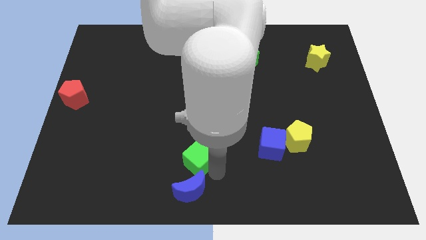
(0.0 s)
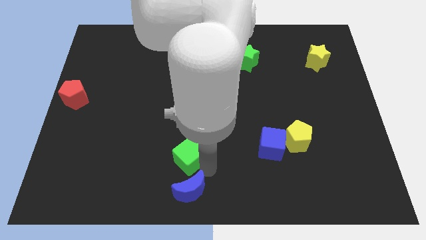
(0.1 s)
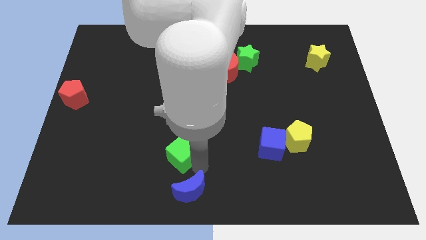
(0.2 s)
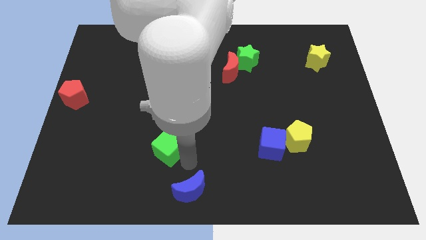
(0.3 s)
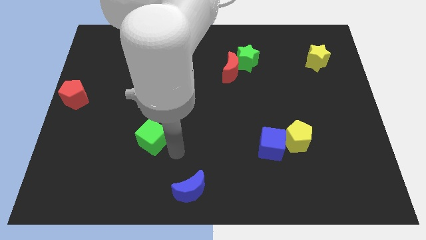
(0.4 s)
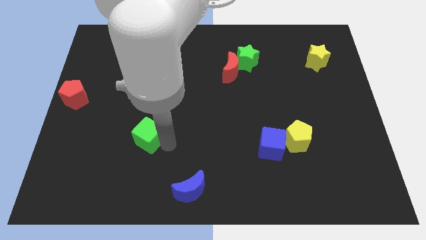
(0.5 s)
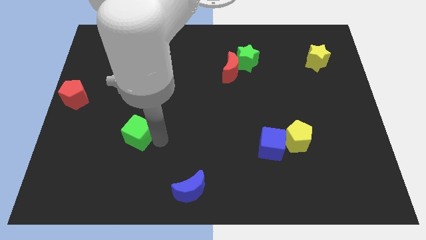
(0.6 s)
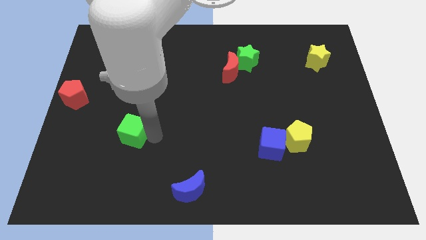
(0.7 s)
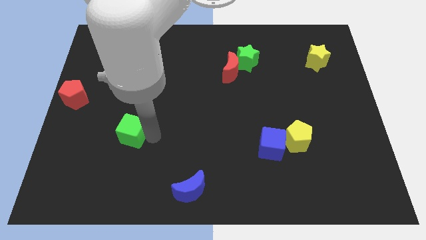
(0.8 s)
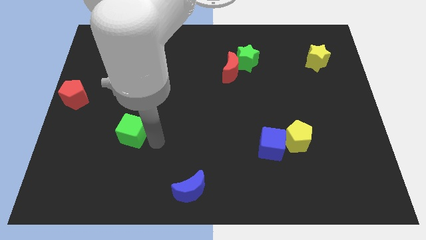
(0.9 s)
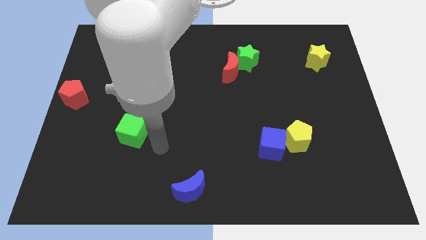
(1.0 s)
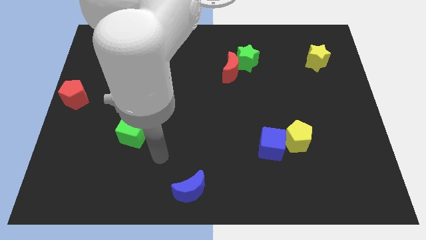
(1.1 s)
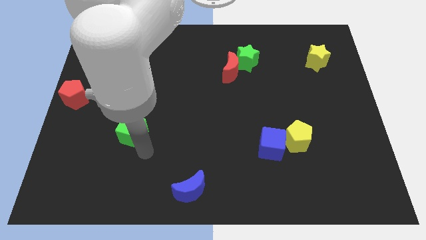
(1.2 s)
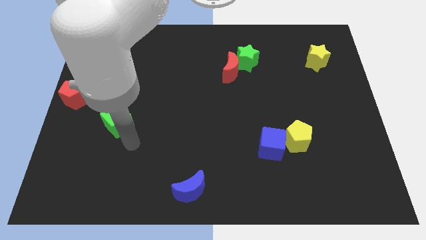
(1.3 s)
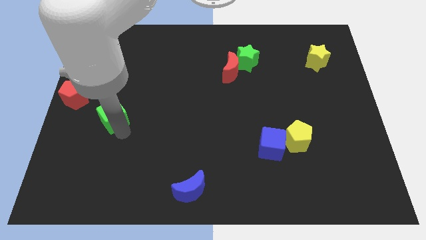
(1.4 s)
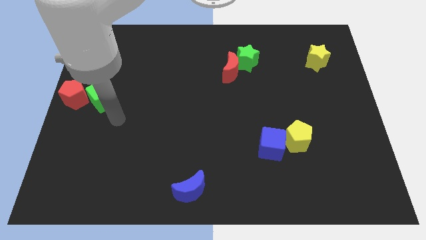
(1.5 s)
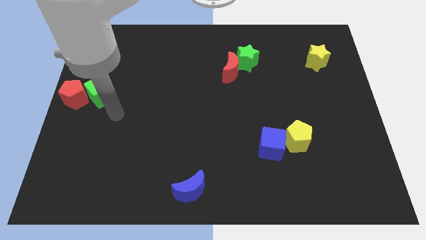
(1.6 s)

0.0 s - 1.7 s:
place green cube beside red pentagon

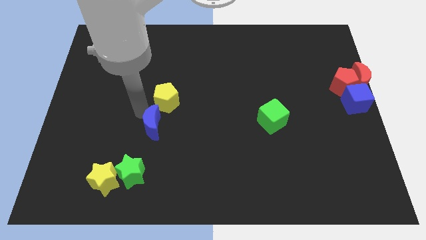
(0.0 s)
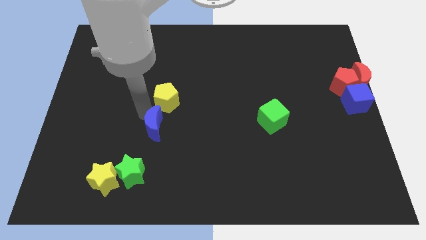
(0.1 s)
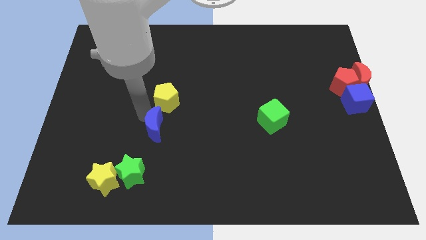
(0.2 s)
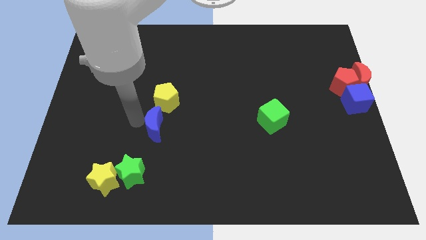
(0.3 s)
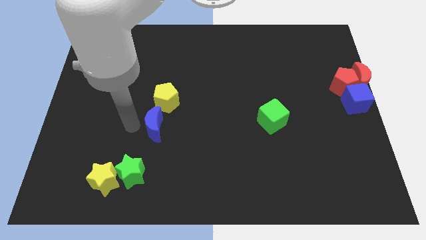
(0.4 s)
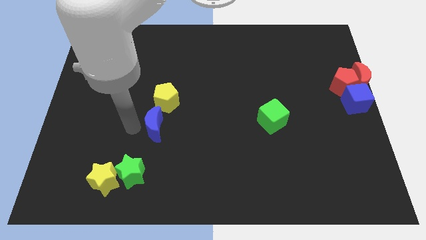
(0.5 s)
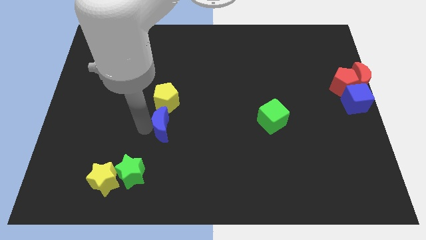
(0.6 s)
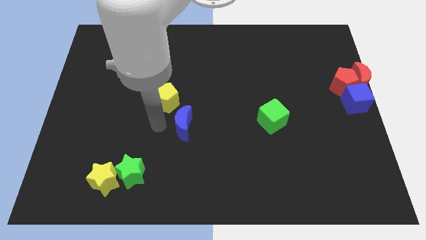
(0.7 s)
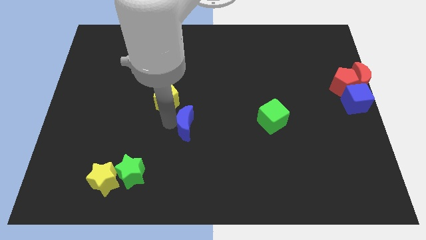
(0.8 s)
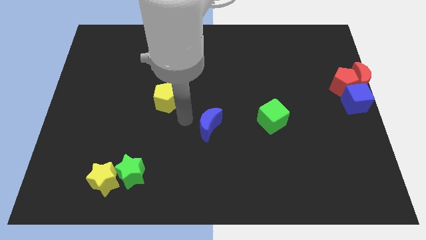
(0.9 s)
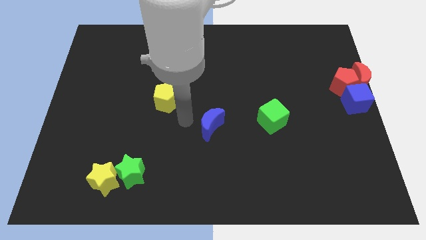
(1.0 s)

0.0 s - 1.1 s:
separate blue moon from yellow pentagon

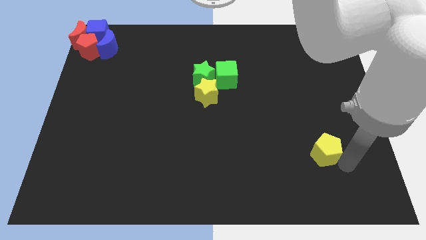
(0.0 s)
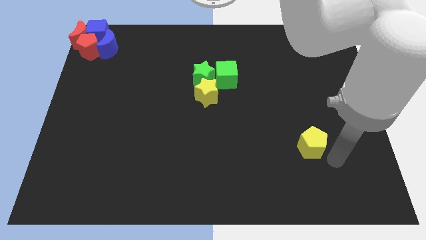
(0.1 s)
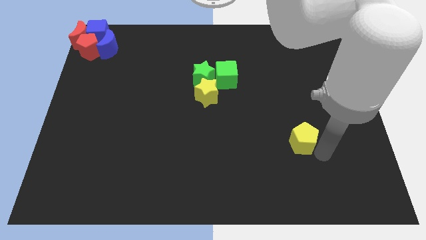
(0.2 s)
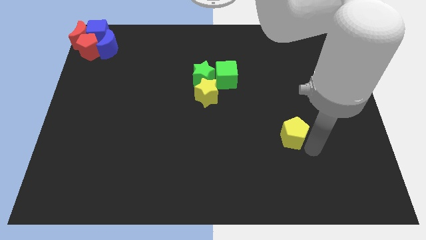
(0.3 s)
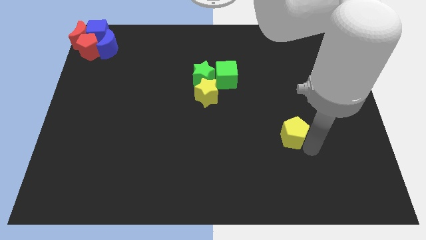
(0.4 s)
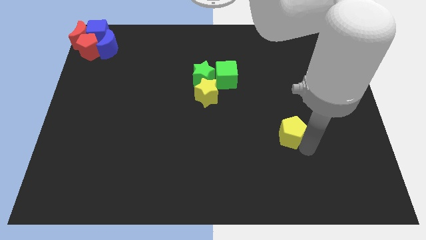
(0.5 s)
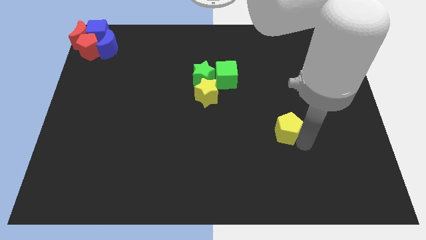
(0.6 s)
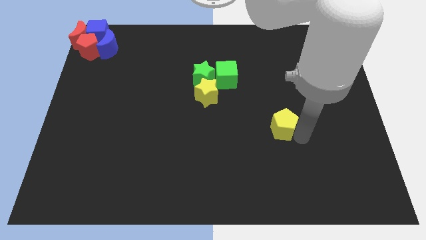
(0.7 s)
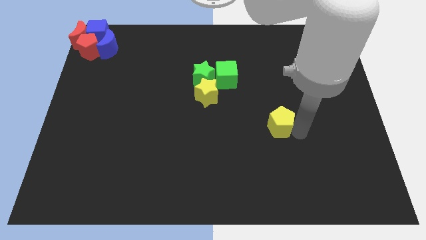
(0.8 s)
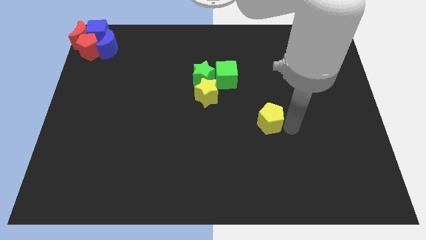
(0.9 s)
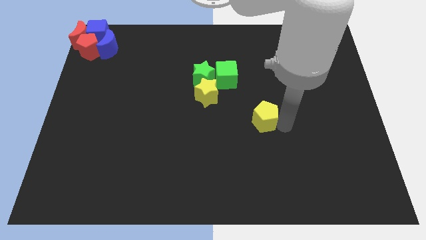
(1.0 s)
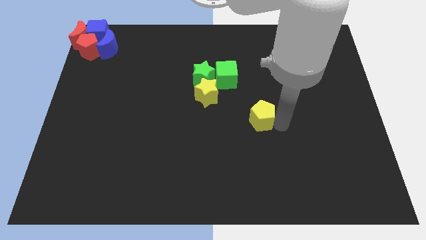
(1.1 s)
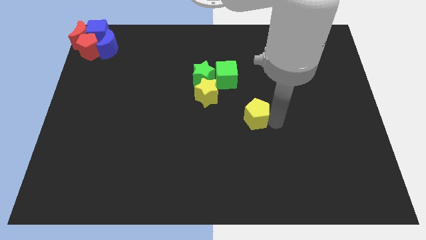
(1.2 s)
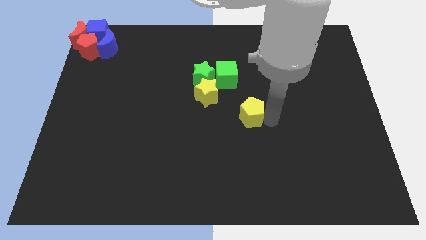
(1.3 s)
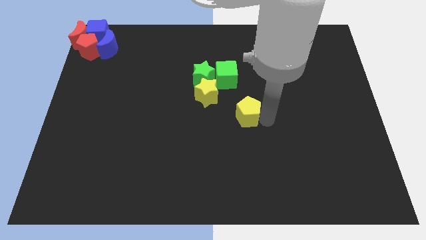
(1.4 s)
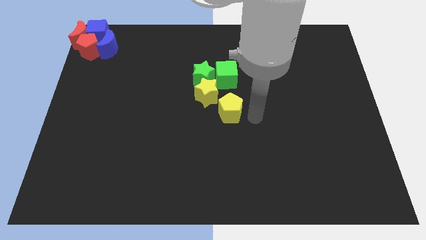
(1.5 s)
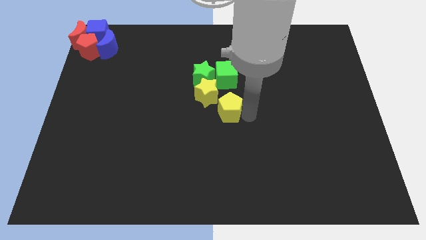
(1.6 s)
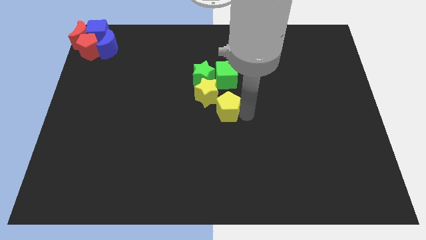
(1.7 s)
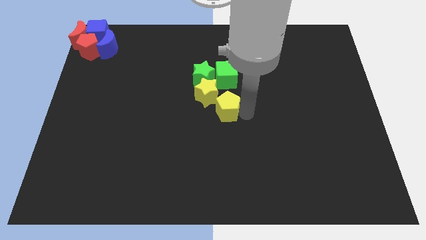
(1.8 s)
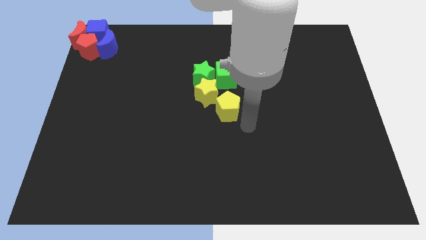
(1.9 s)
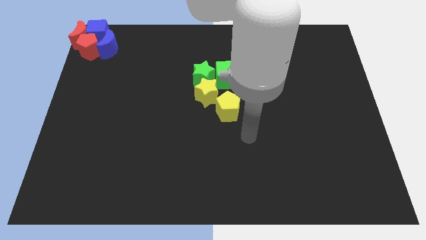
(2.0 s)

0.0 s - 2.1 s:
push yellow pentagon towards the center

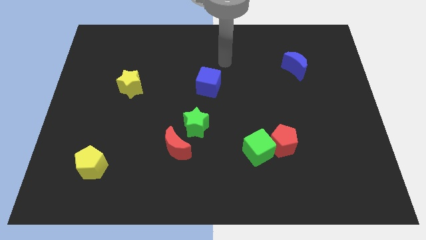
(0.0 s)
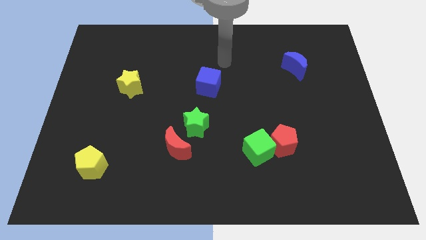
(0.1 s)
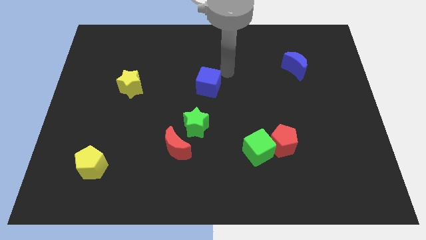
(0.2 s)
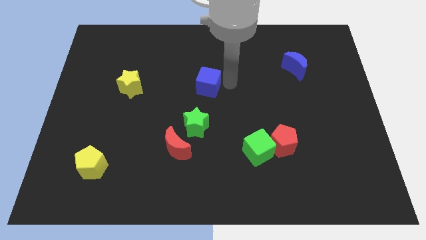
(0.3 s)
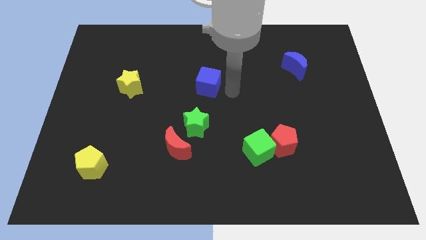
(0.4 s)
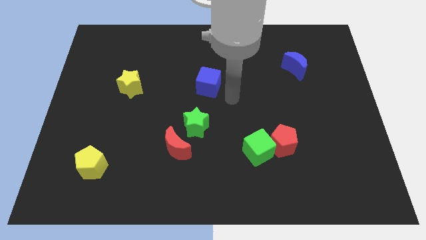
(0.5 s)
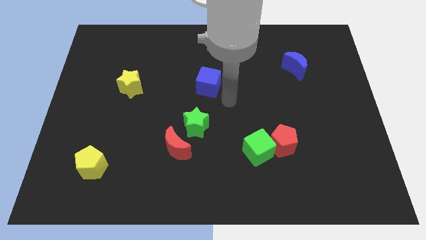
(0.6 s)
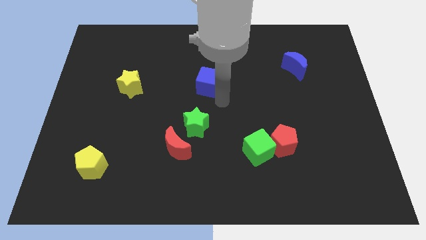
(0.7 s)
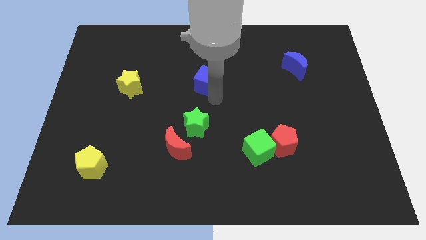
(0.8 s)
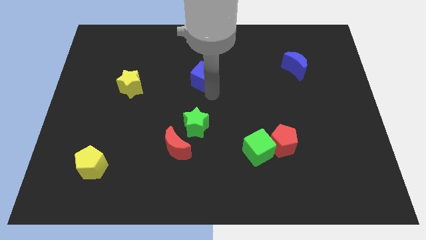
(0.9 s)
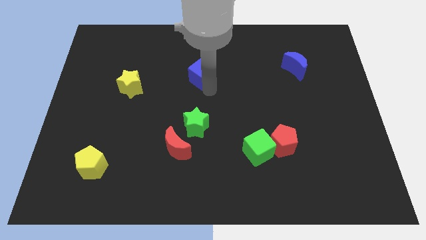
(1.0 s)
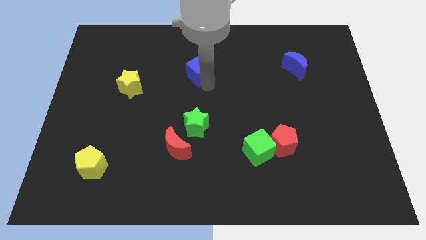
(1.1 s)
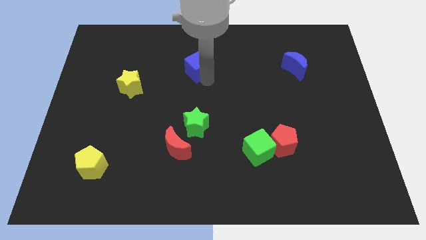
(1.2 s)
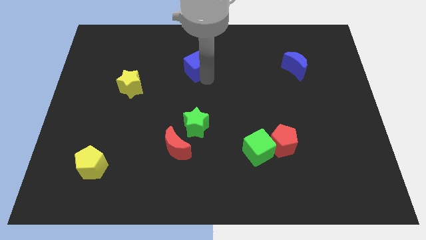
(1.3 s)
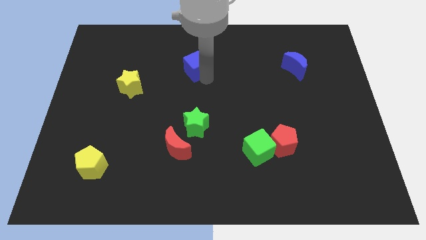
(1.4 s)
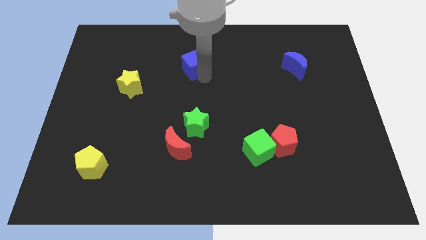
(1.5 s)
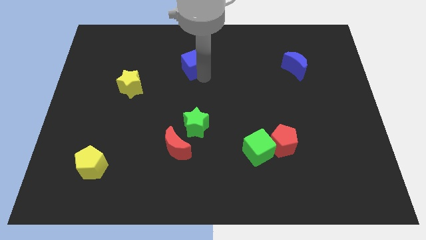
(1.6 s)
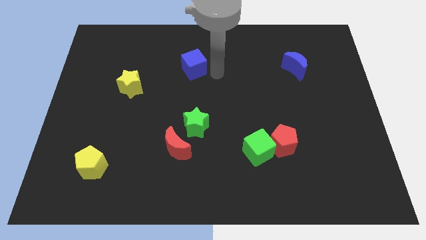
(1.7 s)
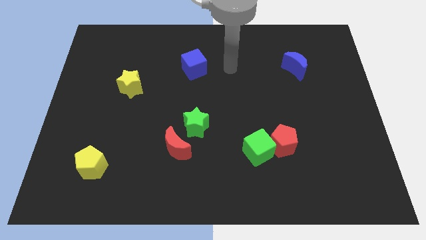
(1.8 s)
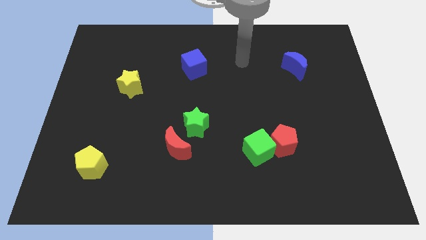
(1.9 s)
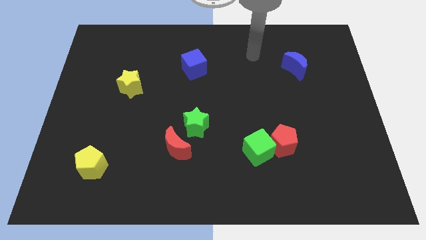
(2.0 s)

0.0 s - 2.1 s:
slightly push the blue cube upwards towards the top center

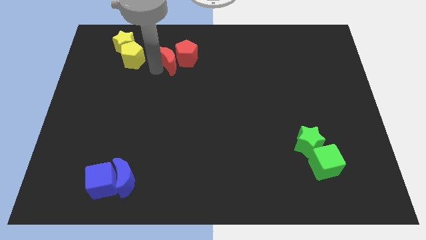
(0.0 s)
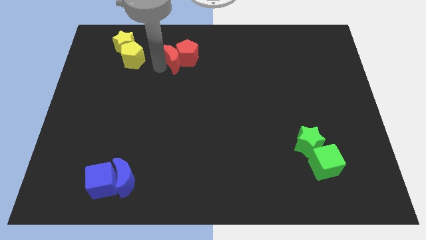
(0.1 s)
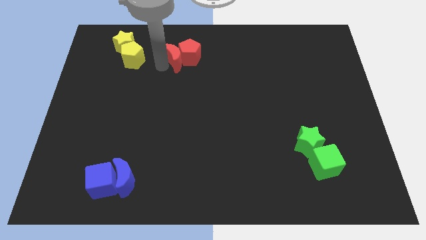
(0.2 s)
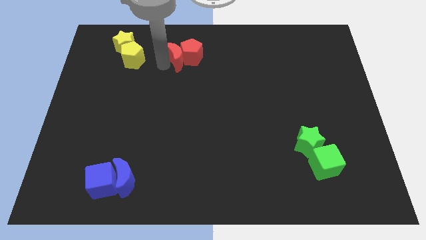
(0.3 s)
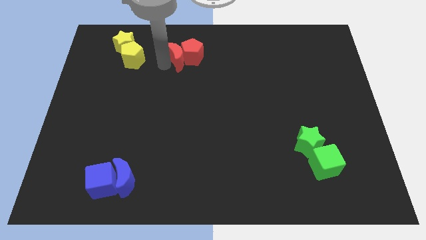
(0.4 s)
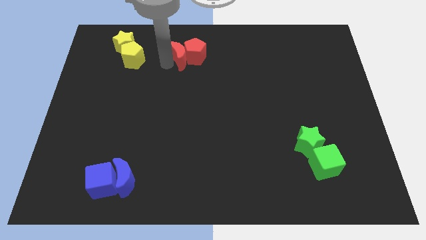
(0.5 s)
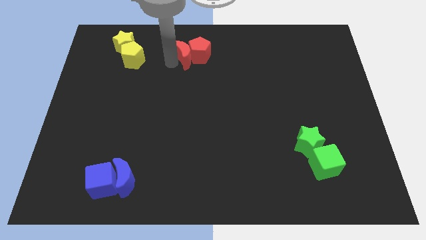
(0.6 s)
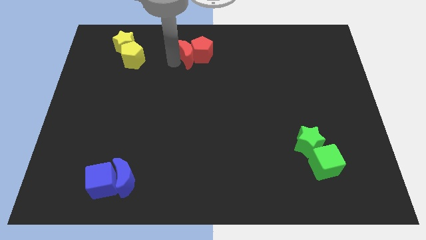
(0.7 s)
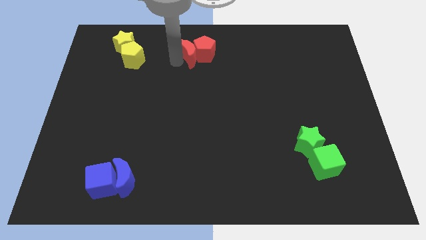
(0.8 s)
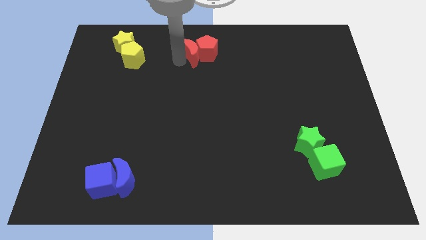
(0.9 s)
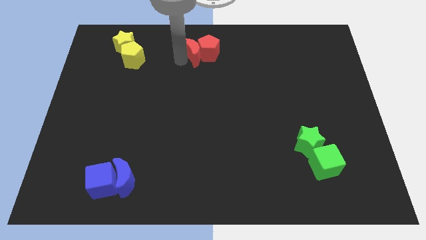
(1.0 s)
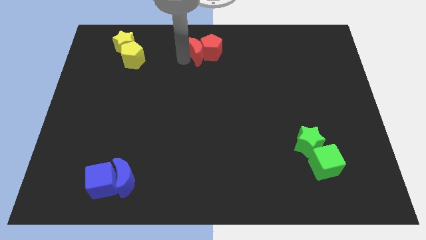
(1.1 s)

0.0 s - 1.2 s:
push red pentagon with the red moon

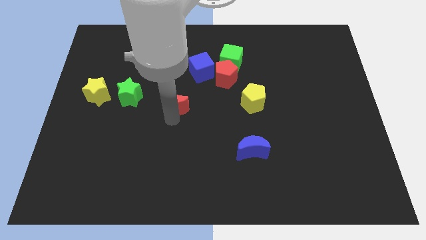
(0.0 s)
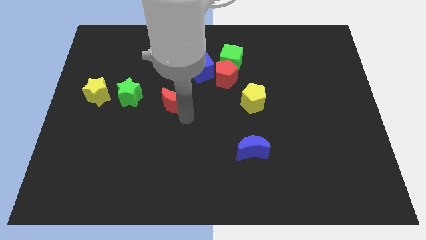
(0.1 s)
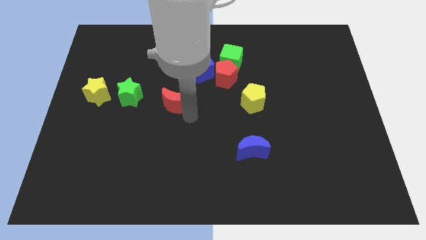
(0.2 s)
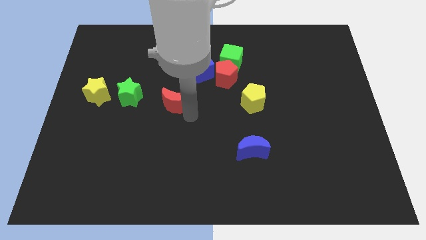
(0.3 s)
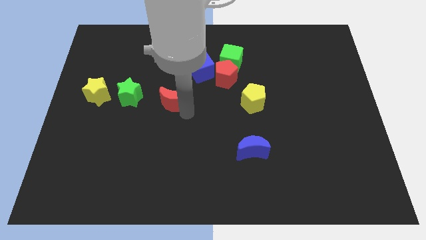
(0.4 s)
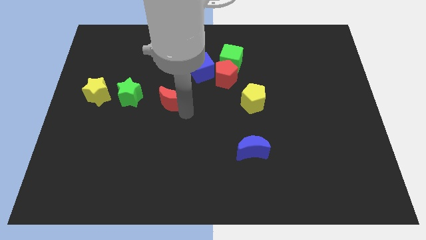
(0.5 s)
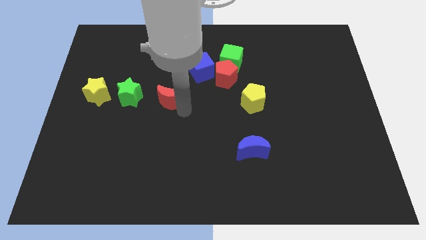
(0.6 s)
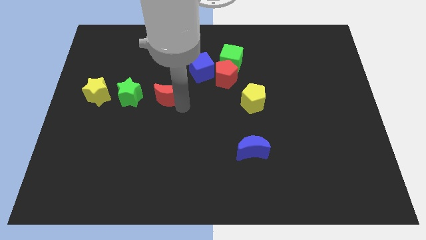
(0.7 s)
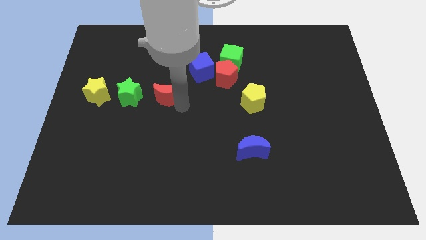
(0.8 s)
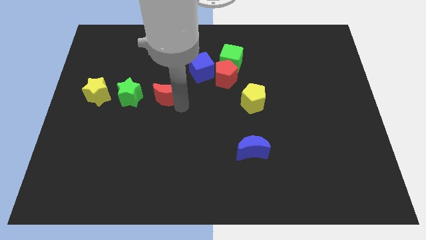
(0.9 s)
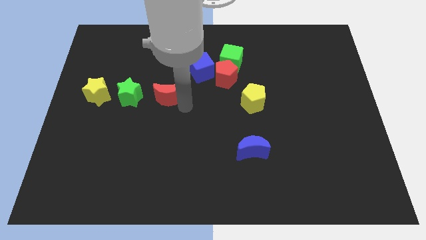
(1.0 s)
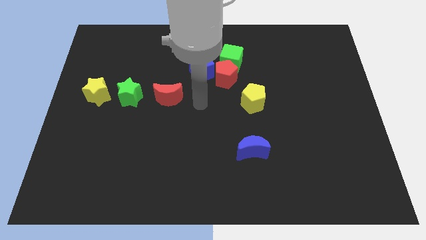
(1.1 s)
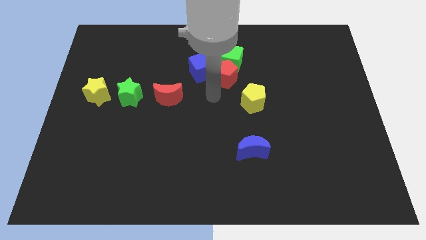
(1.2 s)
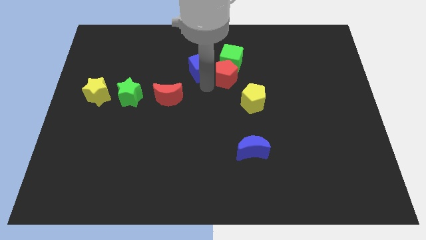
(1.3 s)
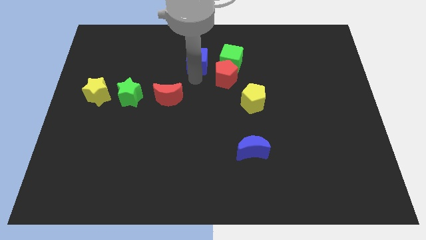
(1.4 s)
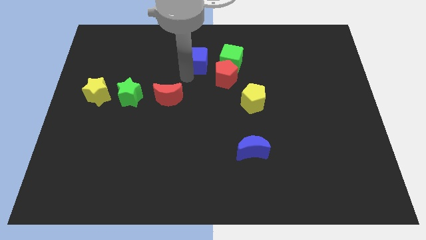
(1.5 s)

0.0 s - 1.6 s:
place red crescent beside green star
